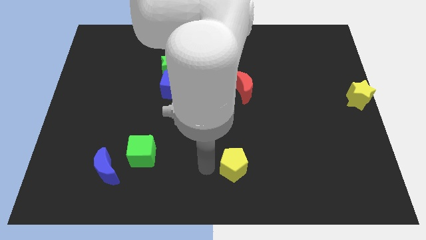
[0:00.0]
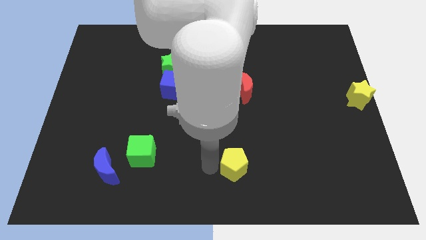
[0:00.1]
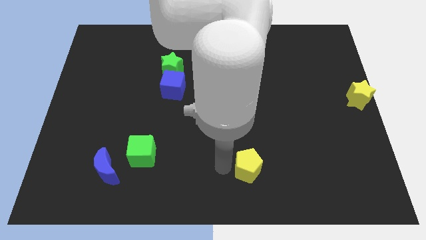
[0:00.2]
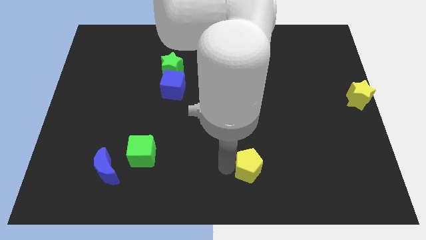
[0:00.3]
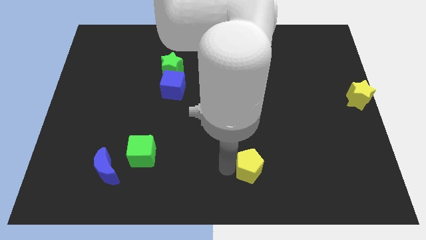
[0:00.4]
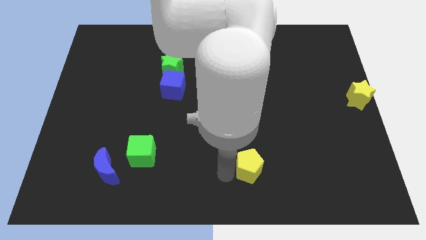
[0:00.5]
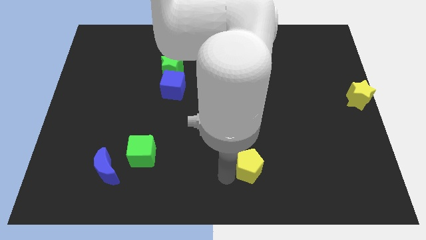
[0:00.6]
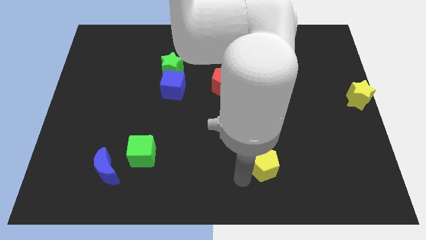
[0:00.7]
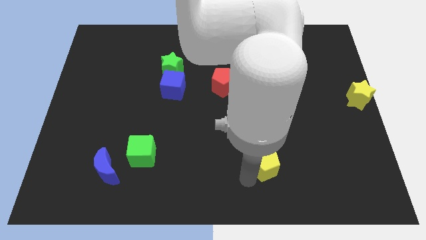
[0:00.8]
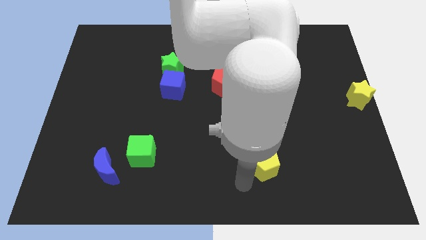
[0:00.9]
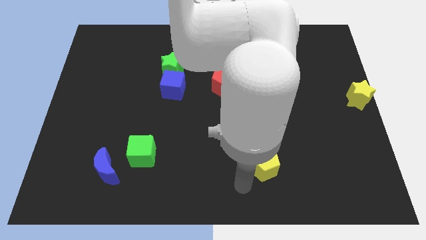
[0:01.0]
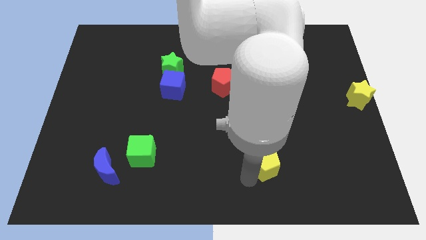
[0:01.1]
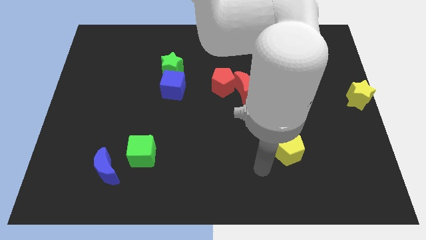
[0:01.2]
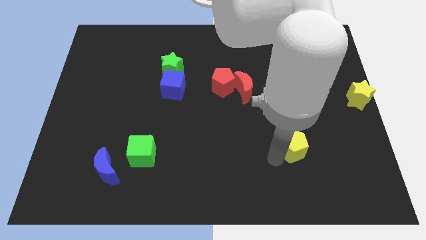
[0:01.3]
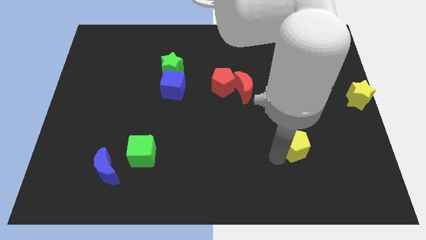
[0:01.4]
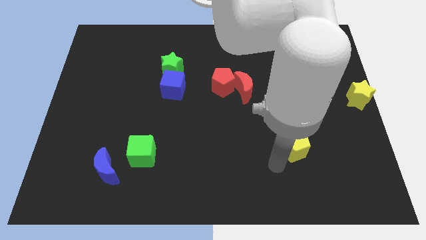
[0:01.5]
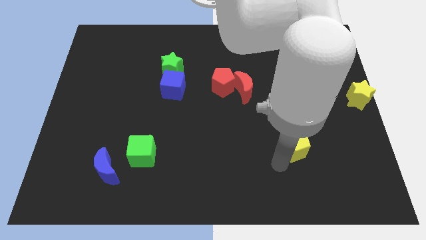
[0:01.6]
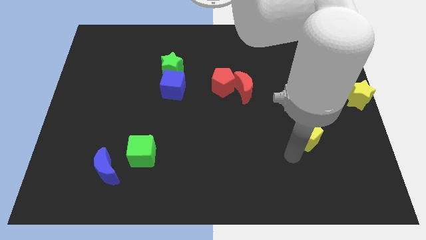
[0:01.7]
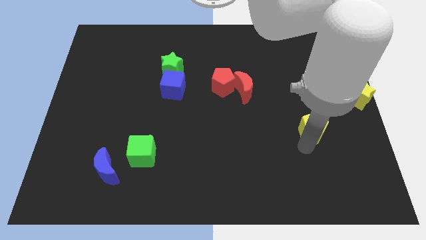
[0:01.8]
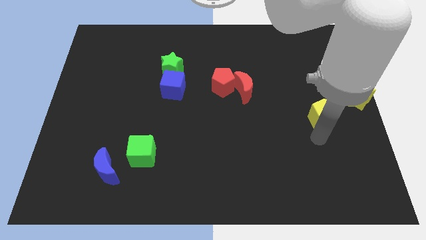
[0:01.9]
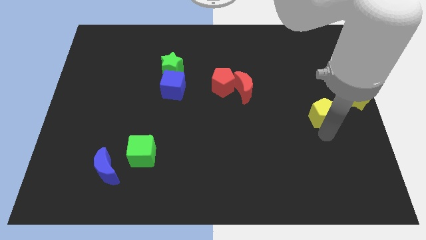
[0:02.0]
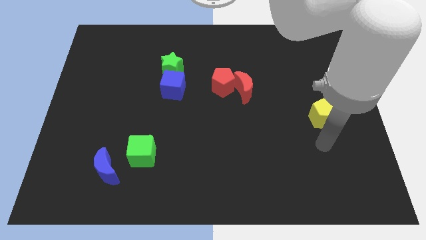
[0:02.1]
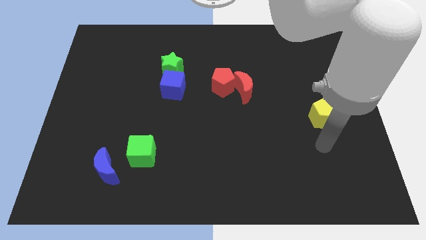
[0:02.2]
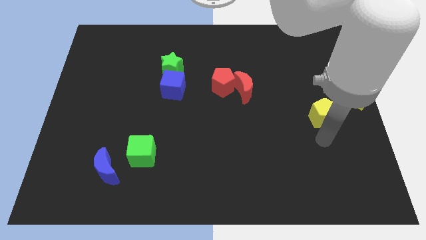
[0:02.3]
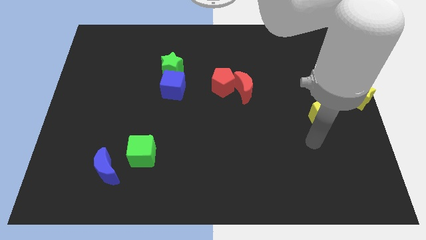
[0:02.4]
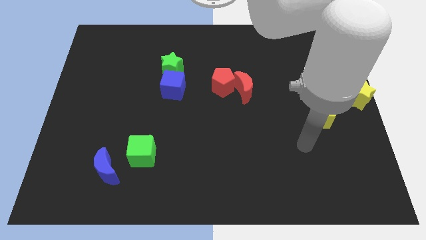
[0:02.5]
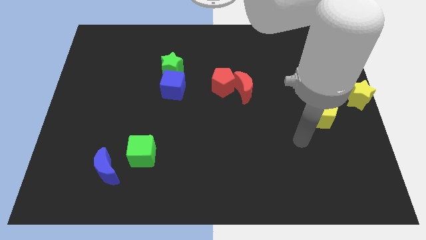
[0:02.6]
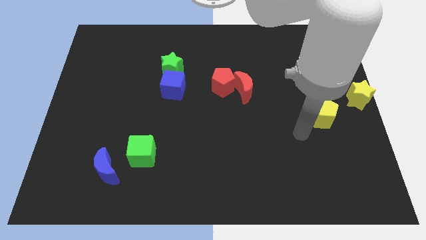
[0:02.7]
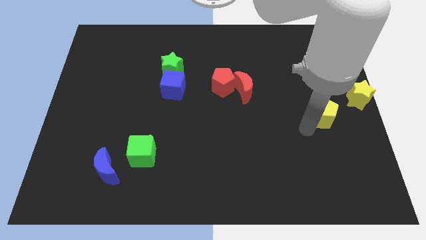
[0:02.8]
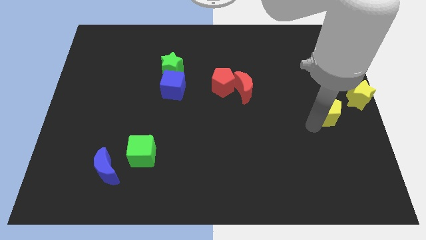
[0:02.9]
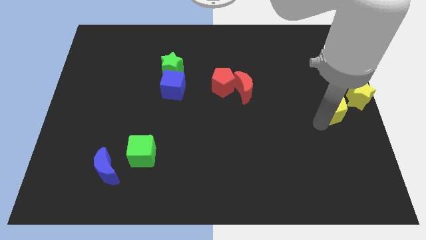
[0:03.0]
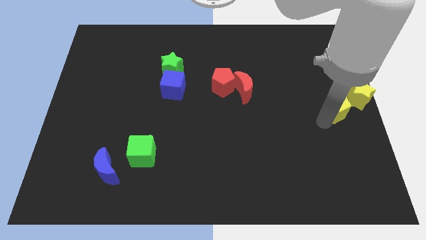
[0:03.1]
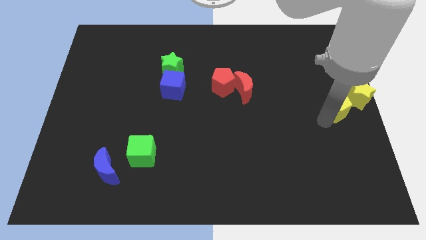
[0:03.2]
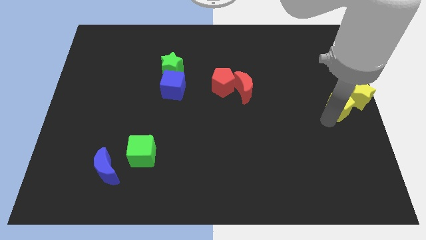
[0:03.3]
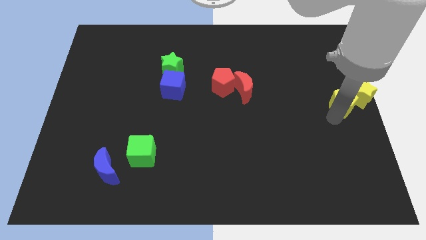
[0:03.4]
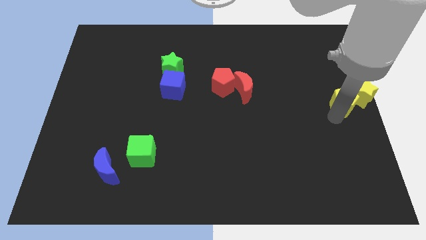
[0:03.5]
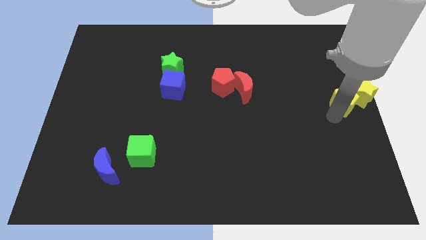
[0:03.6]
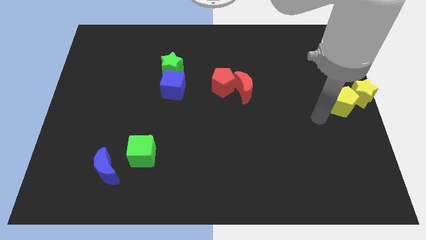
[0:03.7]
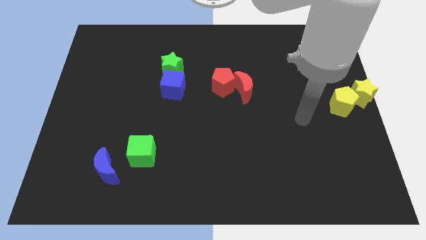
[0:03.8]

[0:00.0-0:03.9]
move the yellow pentagon into the yellow star

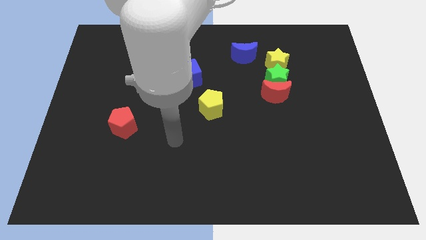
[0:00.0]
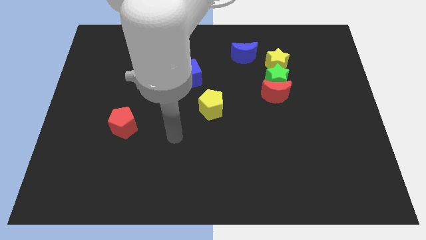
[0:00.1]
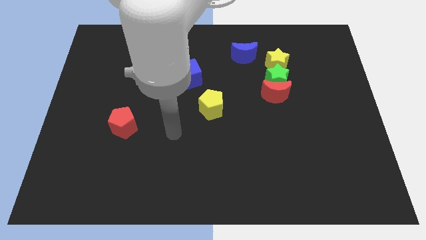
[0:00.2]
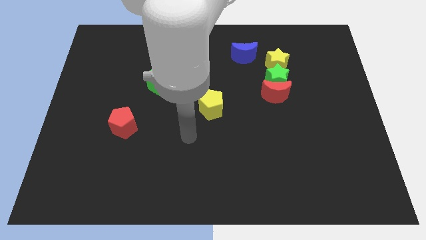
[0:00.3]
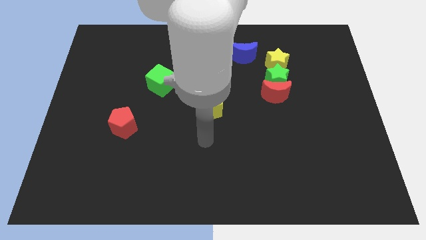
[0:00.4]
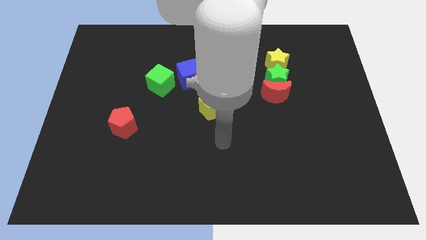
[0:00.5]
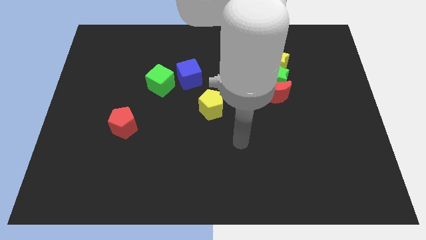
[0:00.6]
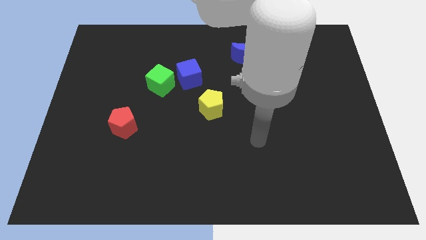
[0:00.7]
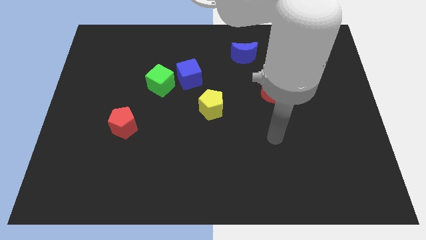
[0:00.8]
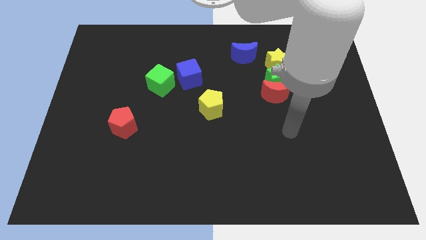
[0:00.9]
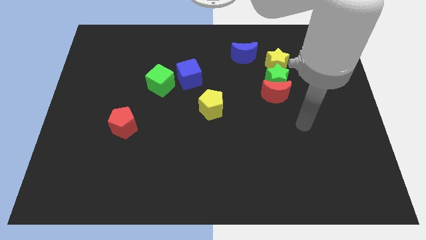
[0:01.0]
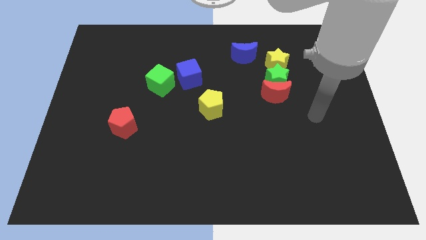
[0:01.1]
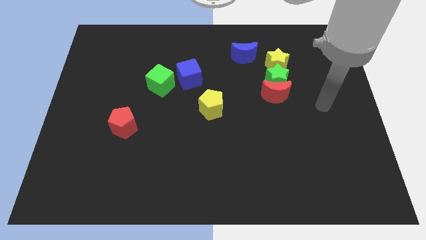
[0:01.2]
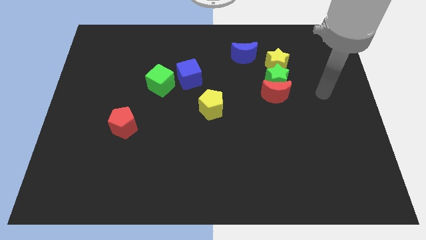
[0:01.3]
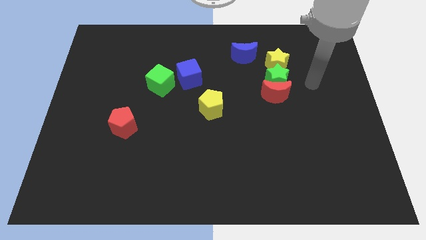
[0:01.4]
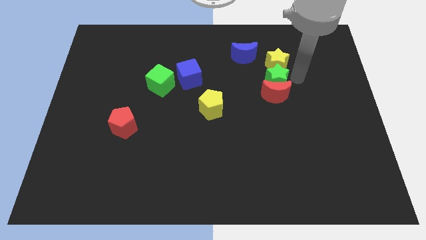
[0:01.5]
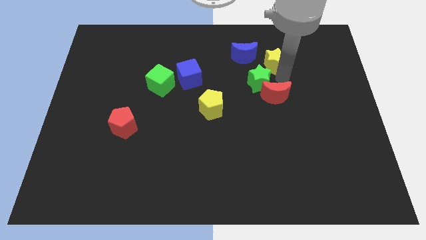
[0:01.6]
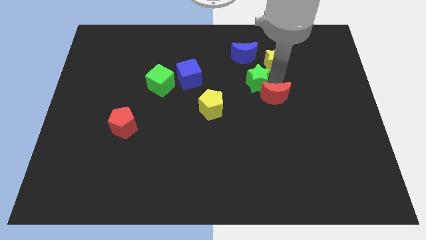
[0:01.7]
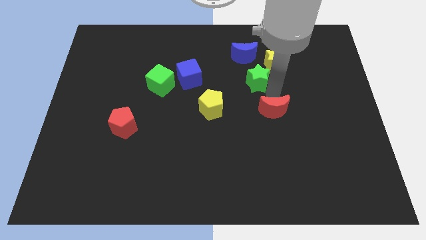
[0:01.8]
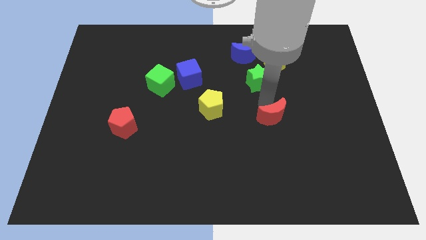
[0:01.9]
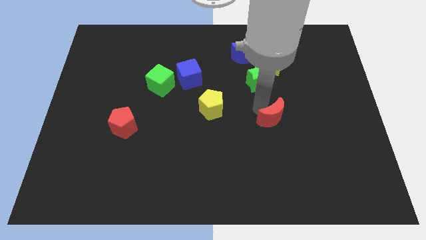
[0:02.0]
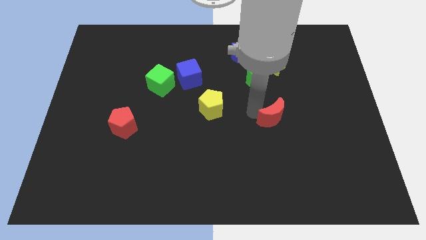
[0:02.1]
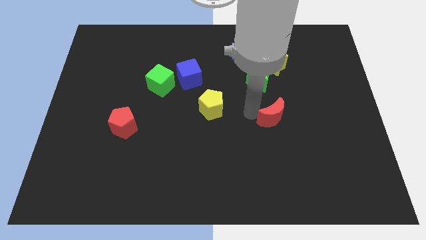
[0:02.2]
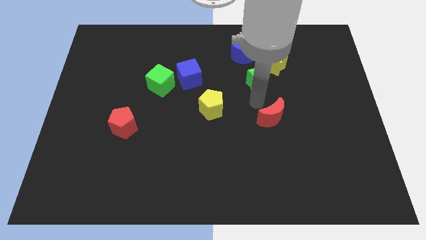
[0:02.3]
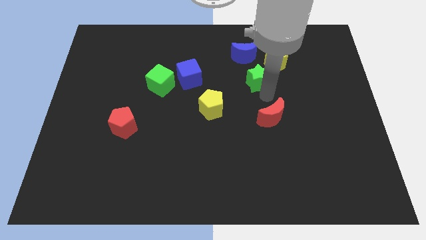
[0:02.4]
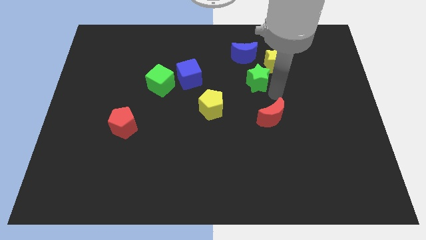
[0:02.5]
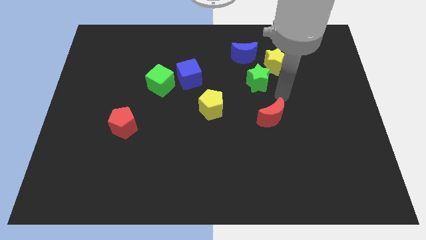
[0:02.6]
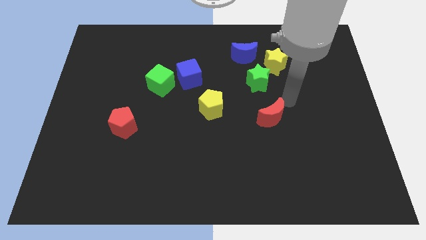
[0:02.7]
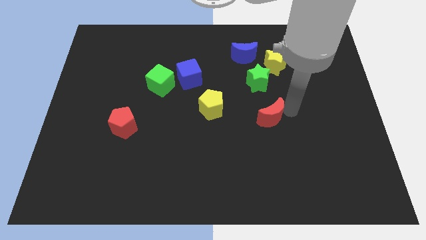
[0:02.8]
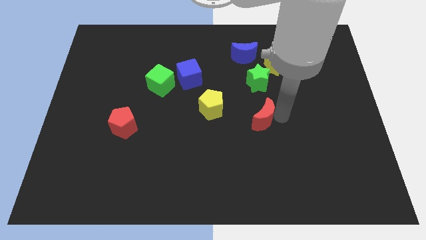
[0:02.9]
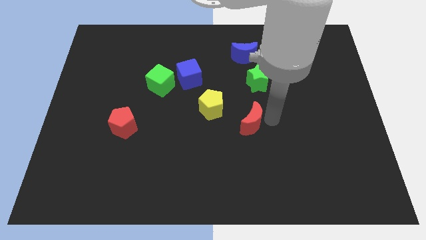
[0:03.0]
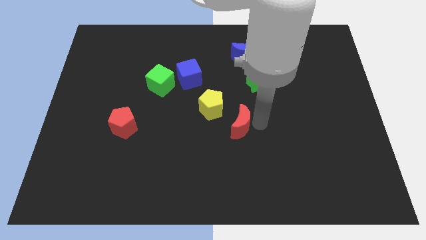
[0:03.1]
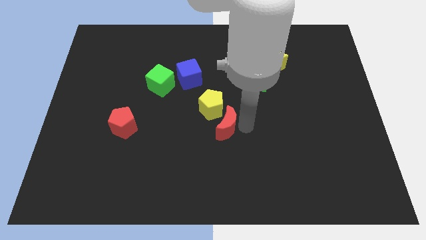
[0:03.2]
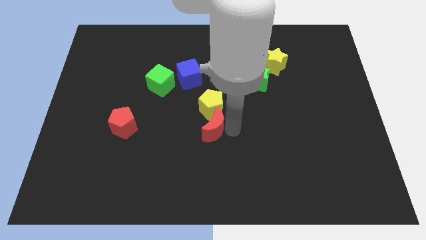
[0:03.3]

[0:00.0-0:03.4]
push the red crescent to the bottom of the yellow pentagon

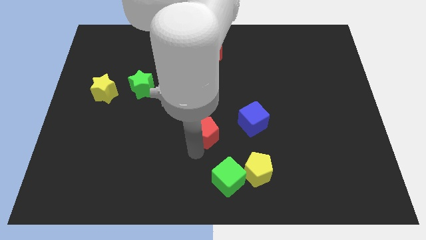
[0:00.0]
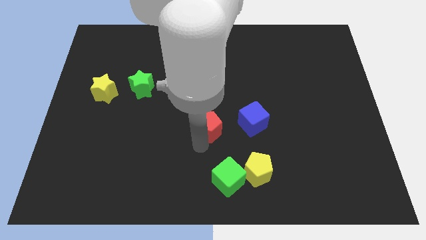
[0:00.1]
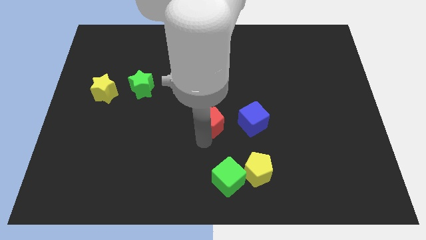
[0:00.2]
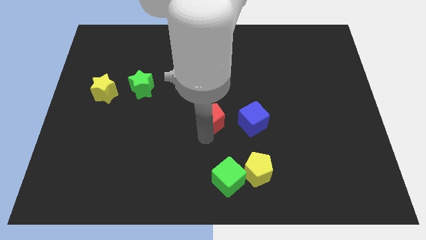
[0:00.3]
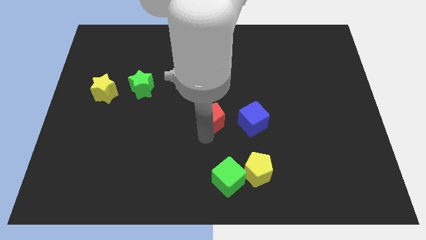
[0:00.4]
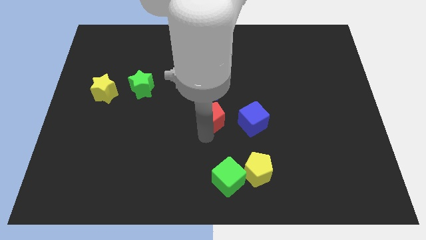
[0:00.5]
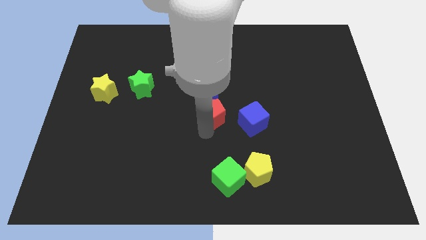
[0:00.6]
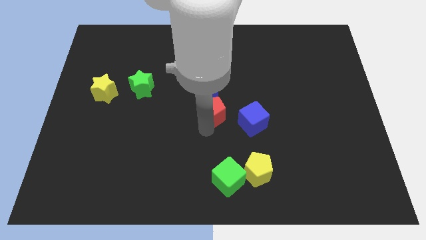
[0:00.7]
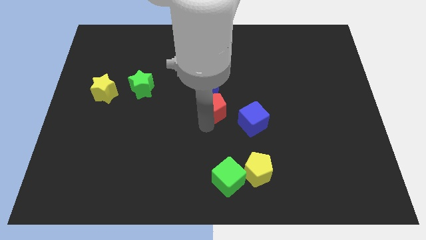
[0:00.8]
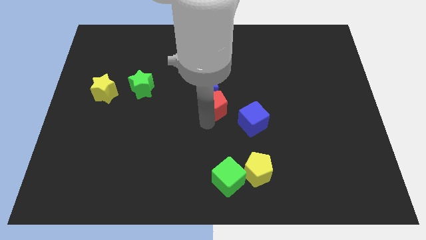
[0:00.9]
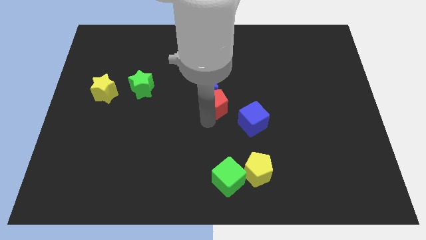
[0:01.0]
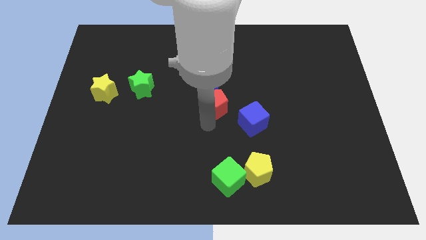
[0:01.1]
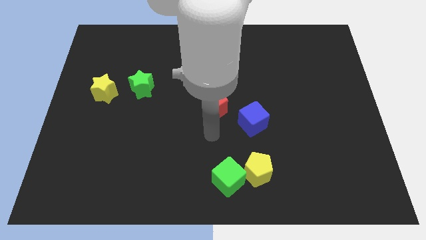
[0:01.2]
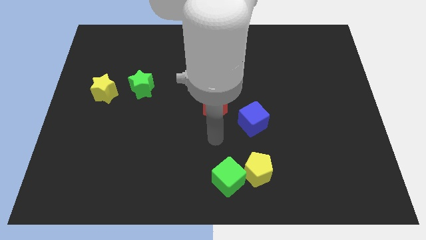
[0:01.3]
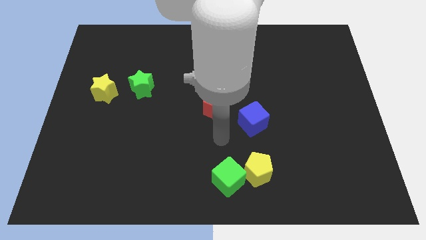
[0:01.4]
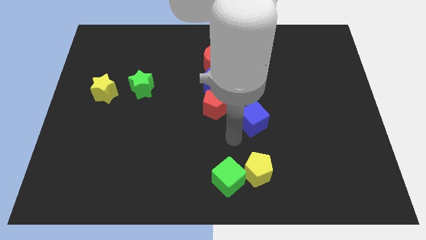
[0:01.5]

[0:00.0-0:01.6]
push the red pentagon below the blue moon
